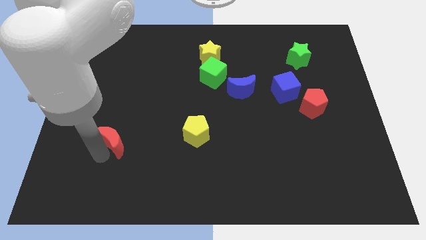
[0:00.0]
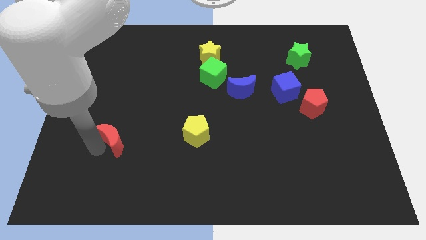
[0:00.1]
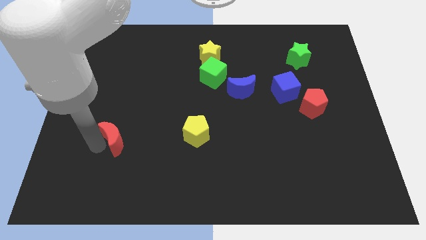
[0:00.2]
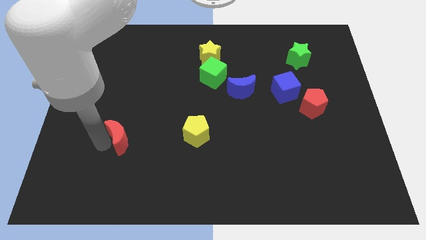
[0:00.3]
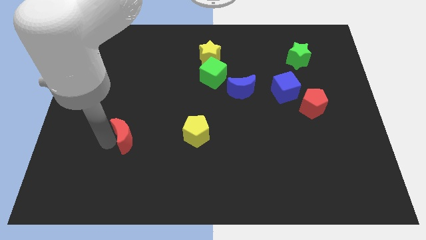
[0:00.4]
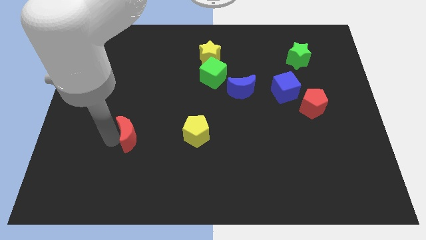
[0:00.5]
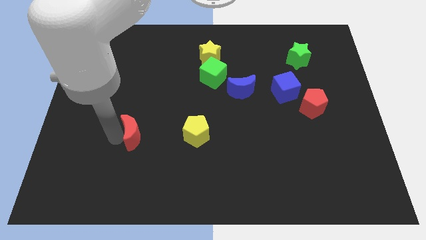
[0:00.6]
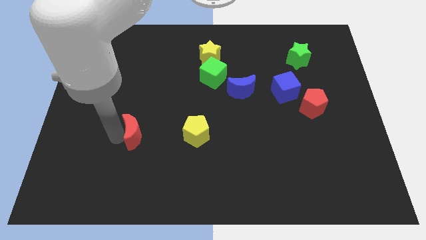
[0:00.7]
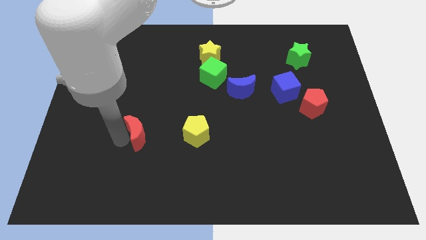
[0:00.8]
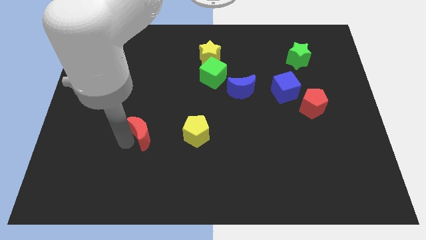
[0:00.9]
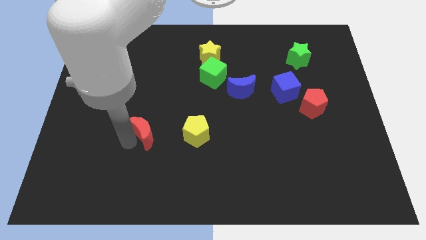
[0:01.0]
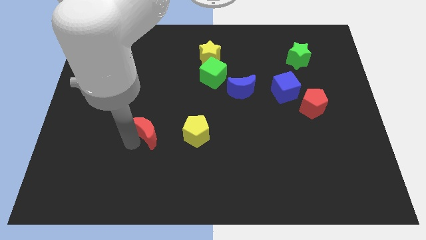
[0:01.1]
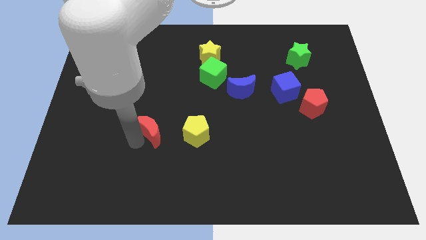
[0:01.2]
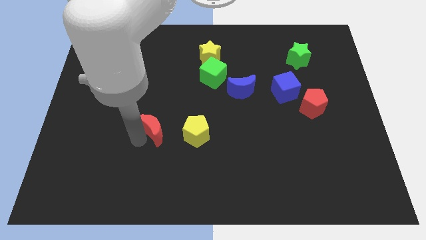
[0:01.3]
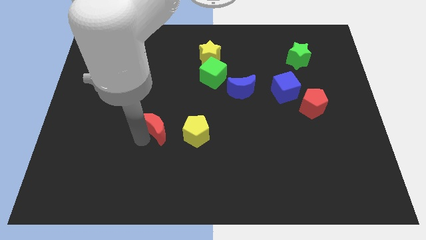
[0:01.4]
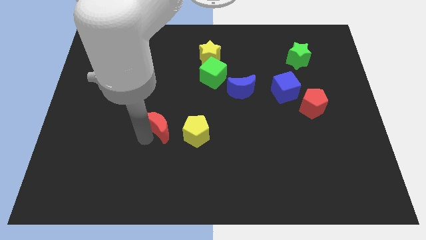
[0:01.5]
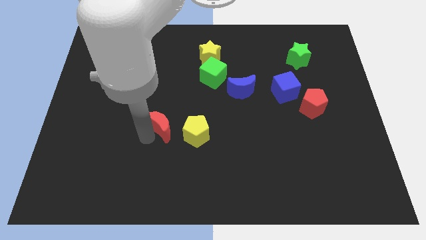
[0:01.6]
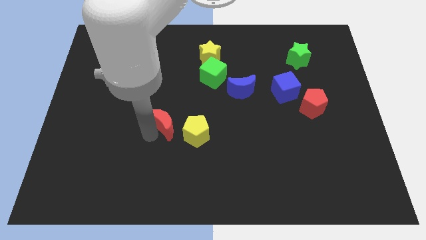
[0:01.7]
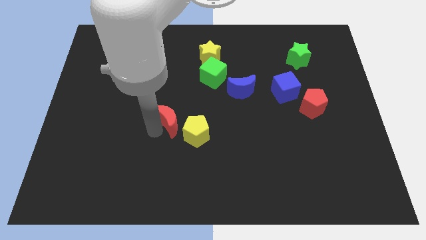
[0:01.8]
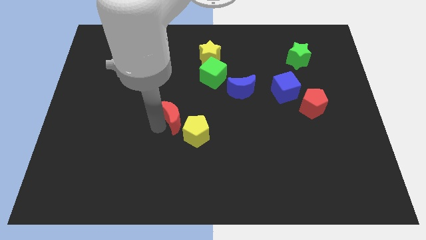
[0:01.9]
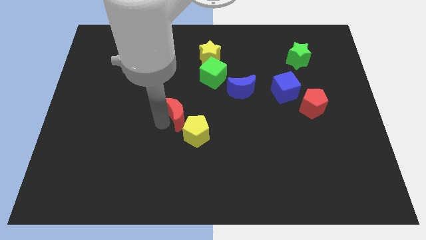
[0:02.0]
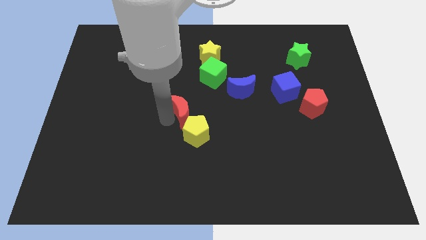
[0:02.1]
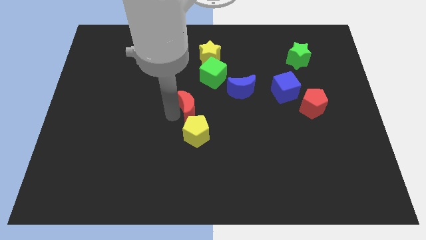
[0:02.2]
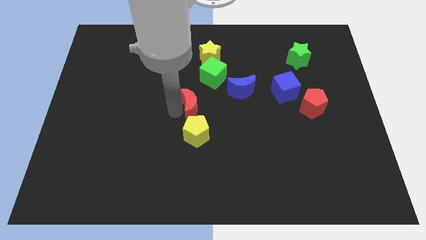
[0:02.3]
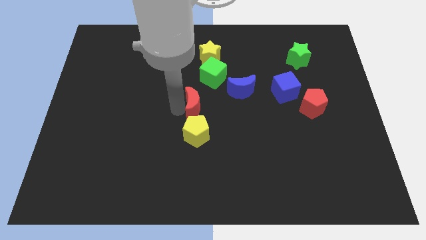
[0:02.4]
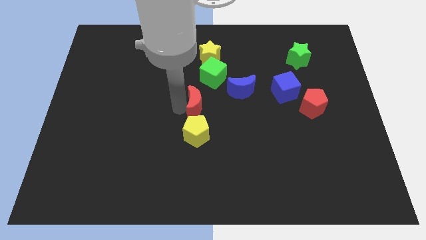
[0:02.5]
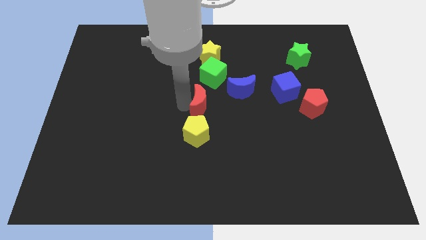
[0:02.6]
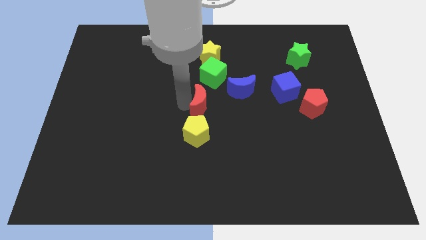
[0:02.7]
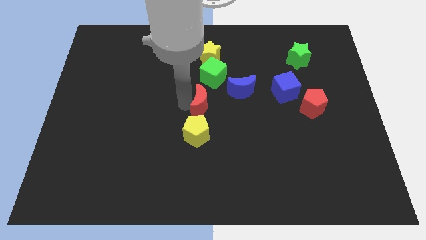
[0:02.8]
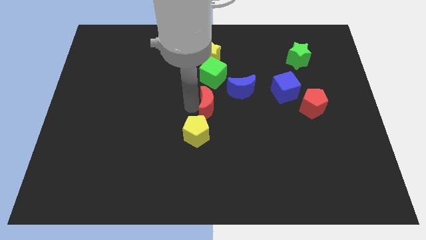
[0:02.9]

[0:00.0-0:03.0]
place the red moon in between green block and the yellow pentagon

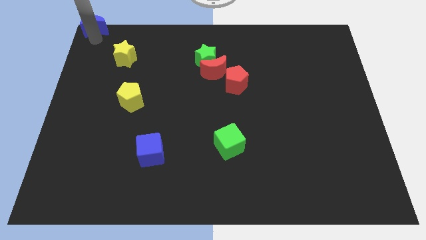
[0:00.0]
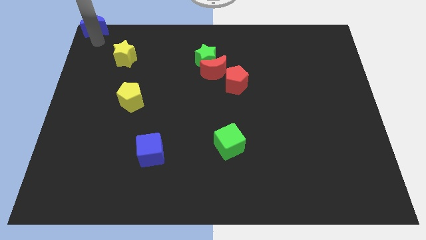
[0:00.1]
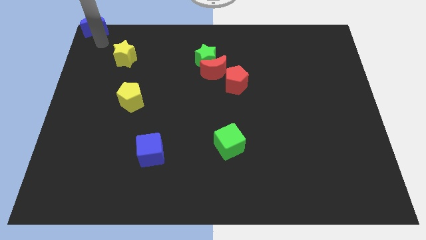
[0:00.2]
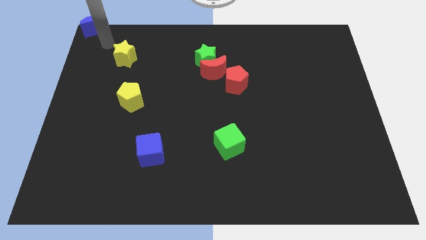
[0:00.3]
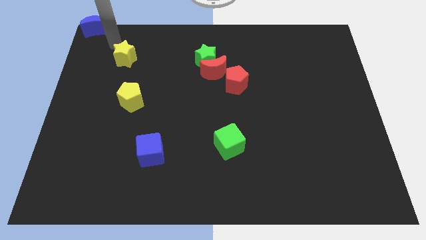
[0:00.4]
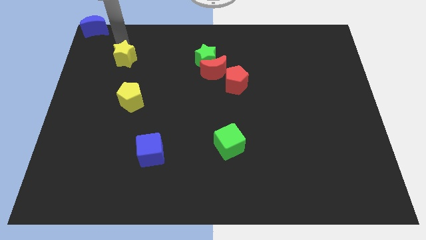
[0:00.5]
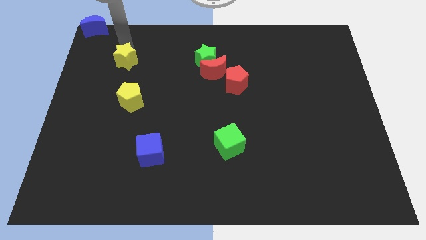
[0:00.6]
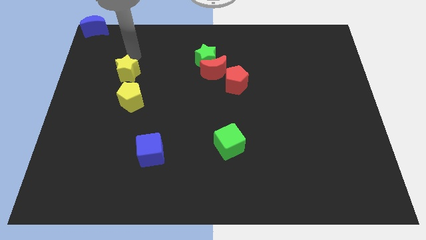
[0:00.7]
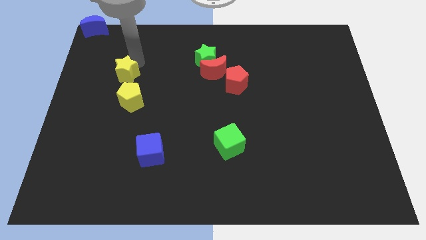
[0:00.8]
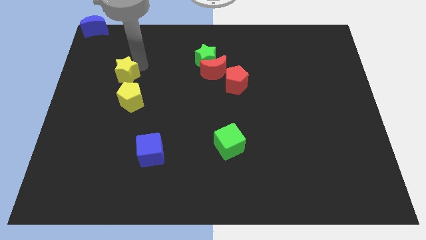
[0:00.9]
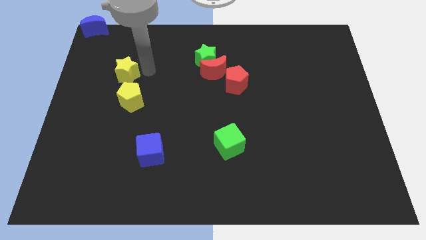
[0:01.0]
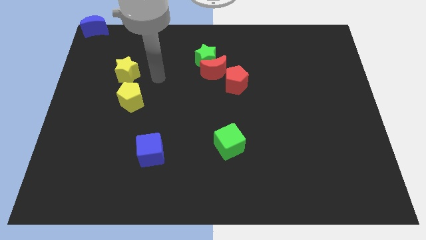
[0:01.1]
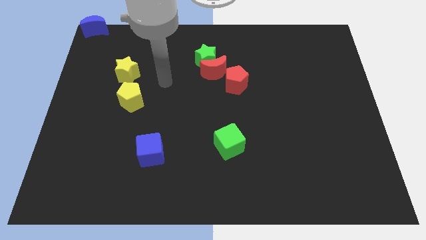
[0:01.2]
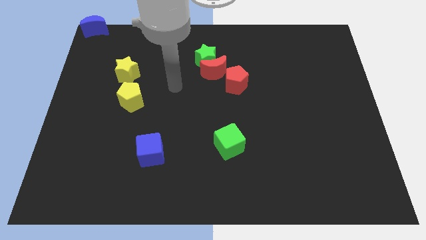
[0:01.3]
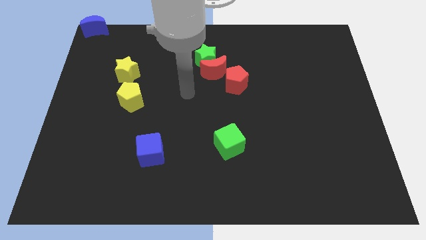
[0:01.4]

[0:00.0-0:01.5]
move the yellow star slightly towards the yellow pentagon

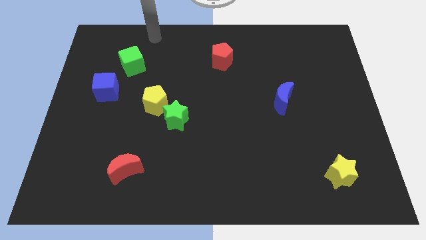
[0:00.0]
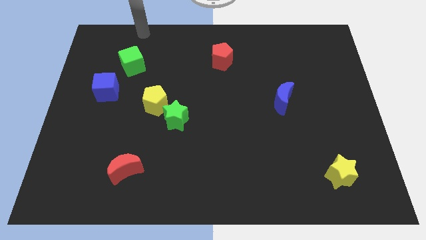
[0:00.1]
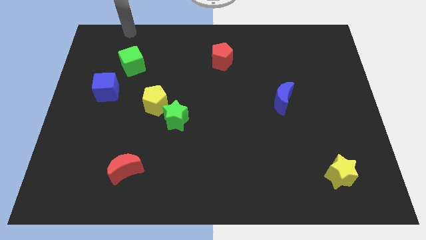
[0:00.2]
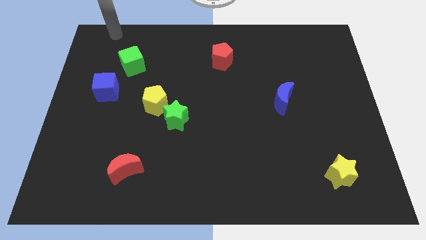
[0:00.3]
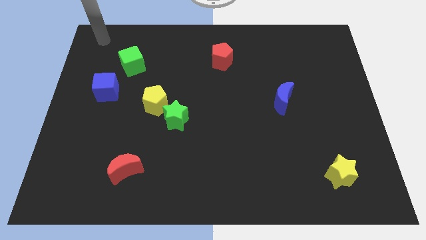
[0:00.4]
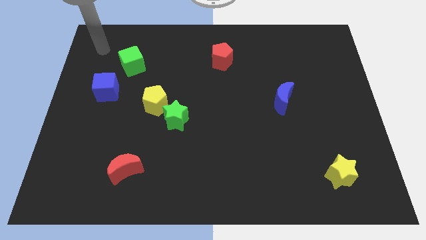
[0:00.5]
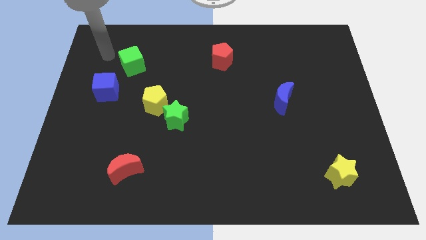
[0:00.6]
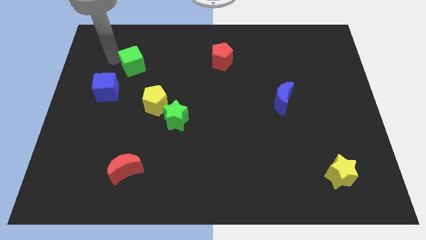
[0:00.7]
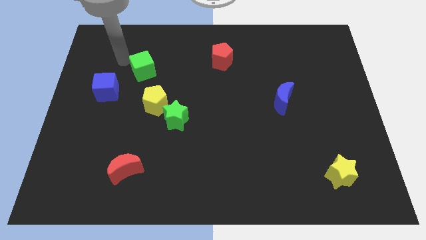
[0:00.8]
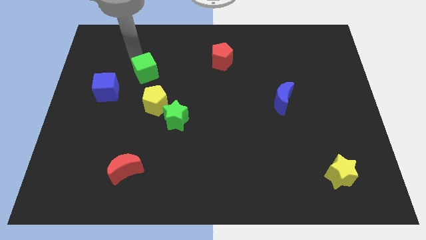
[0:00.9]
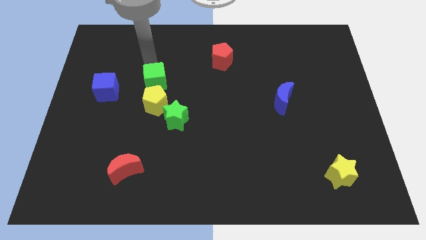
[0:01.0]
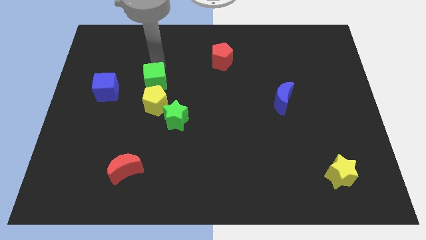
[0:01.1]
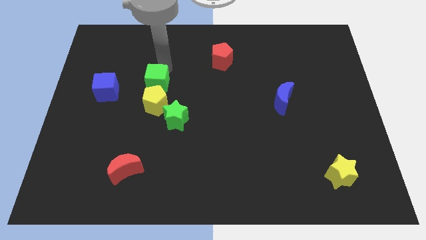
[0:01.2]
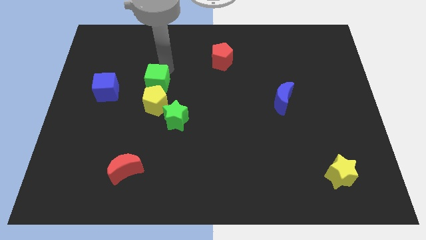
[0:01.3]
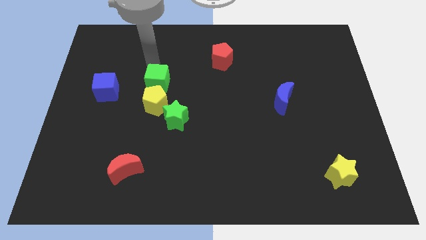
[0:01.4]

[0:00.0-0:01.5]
push the green cube above the yellow pentagon

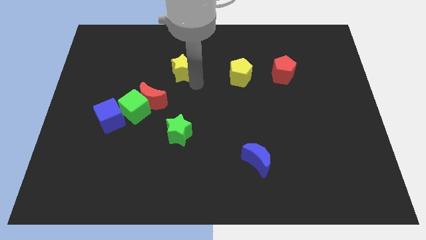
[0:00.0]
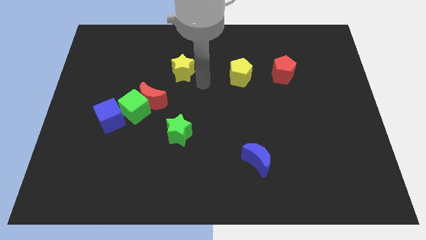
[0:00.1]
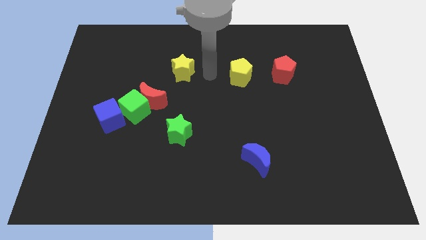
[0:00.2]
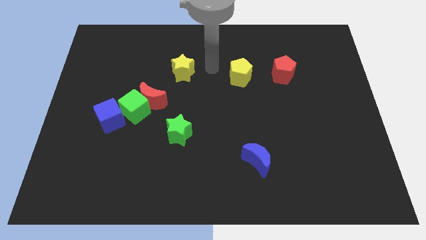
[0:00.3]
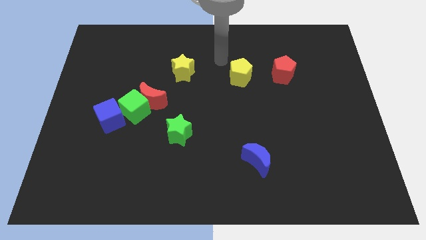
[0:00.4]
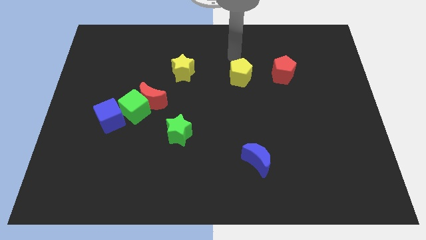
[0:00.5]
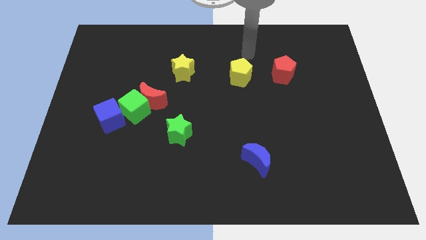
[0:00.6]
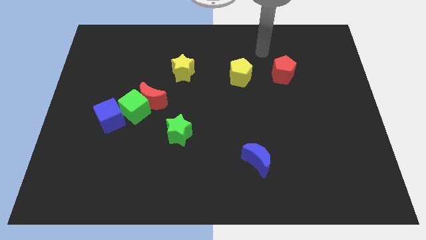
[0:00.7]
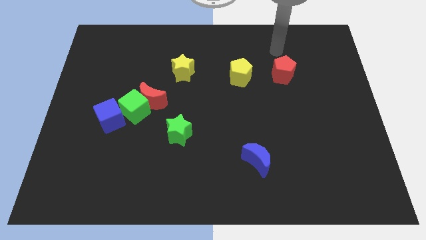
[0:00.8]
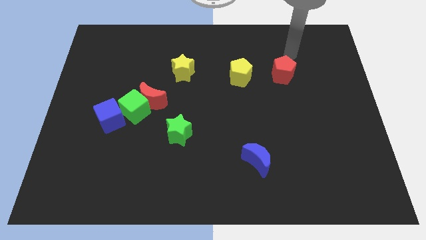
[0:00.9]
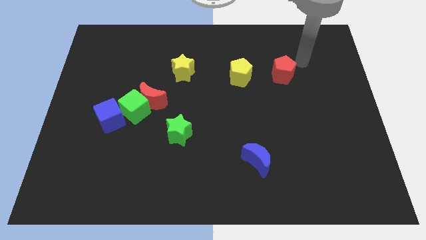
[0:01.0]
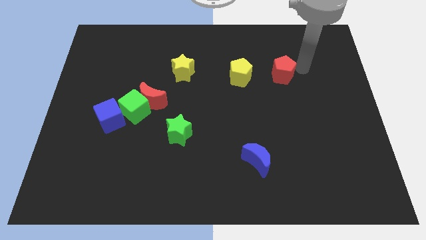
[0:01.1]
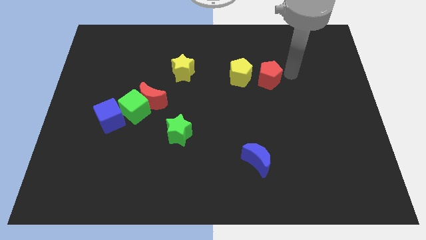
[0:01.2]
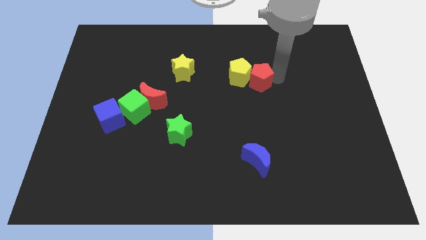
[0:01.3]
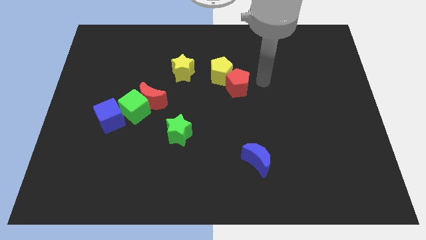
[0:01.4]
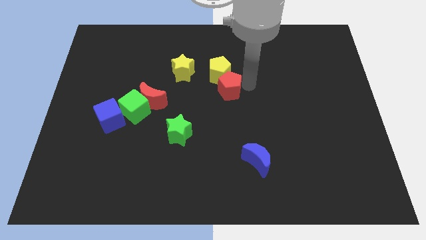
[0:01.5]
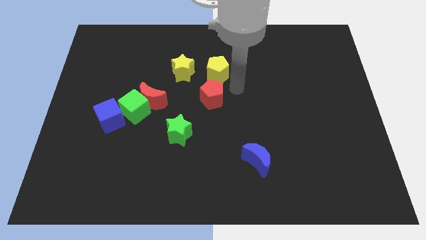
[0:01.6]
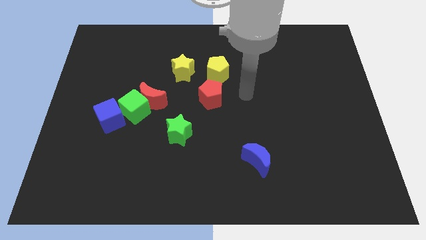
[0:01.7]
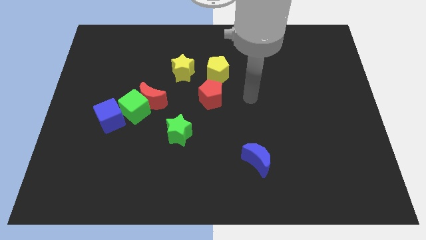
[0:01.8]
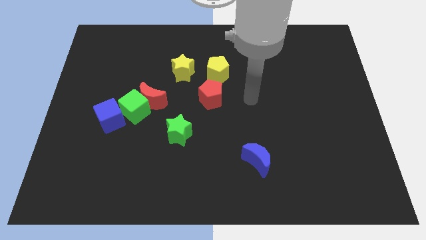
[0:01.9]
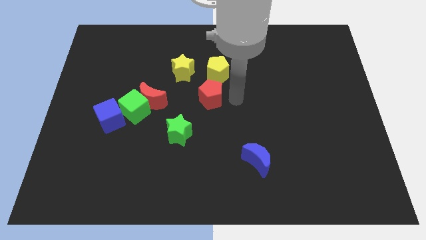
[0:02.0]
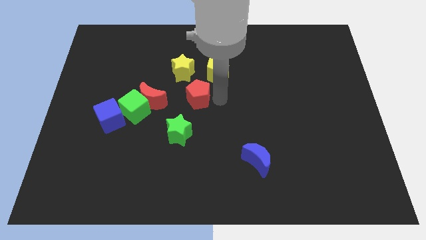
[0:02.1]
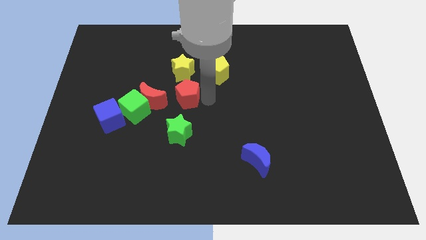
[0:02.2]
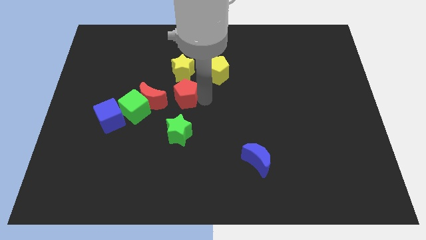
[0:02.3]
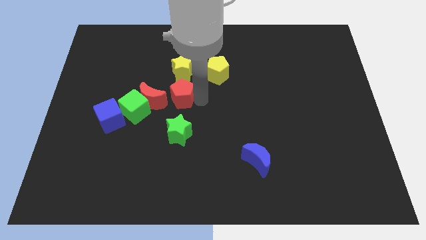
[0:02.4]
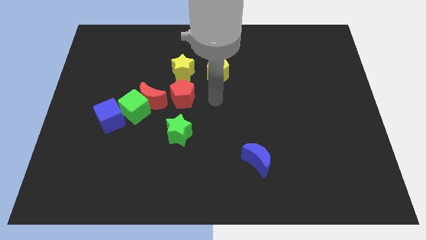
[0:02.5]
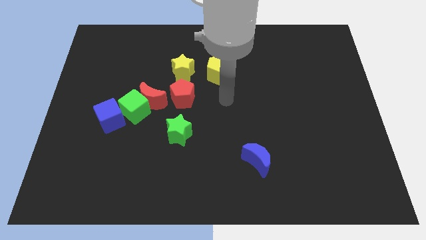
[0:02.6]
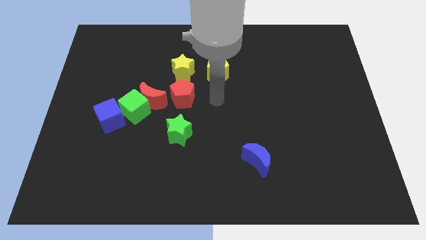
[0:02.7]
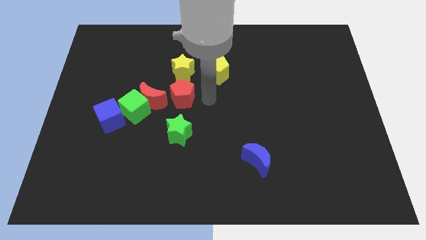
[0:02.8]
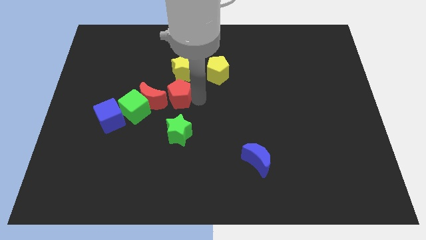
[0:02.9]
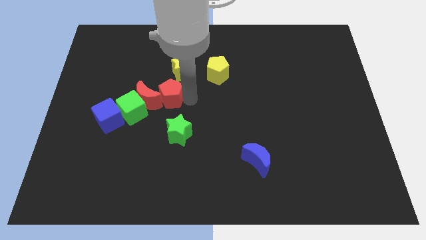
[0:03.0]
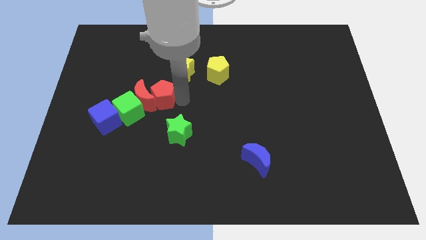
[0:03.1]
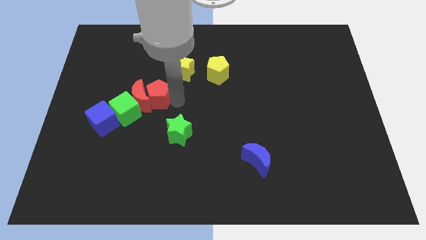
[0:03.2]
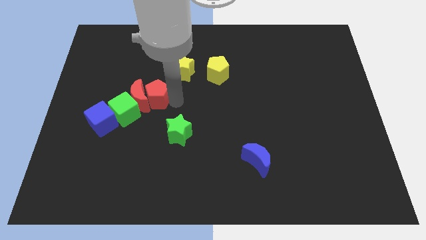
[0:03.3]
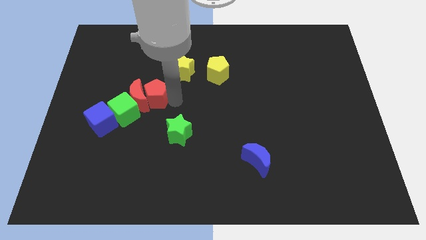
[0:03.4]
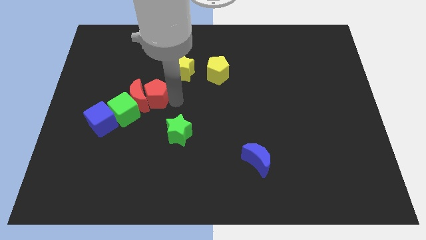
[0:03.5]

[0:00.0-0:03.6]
move the red pentagon into the right side of the red crescent
